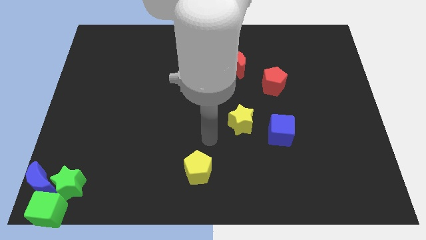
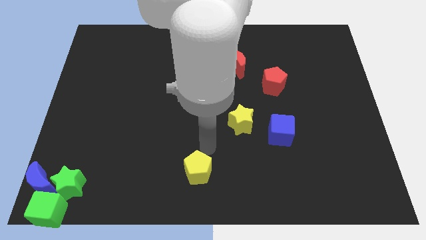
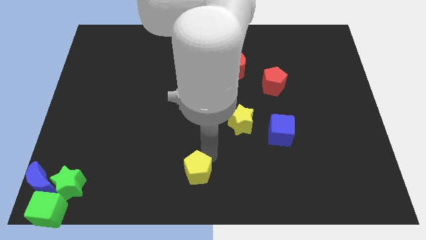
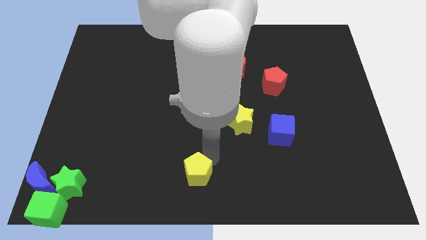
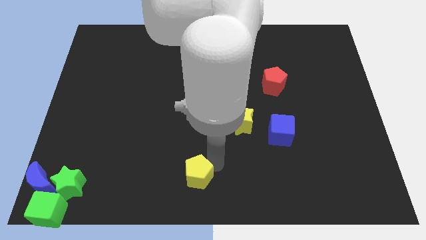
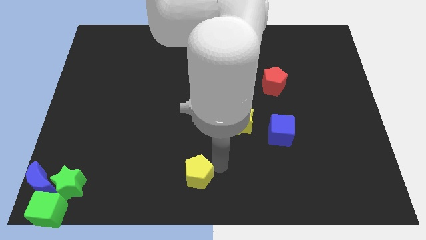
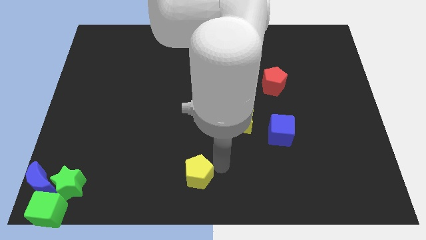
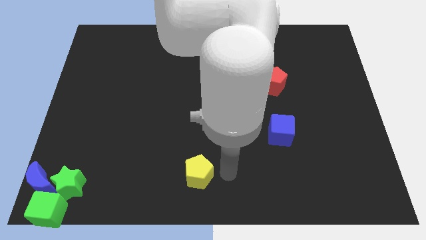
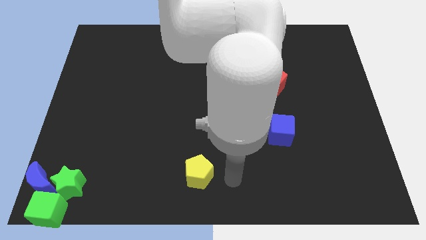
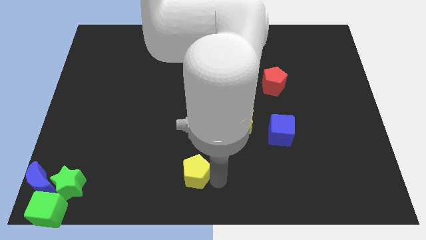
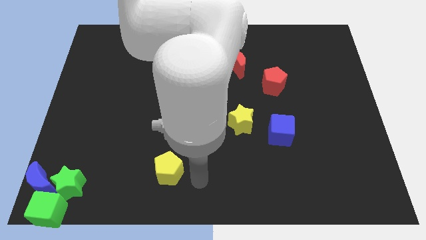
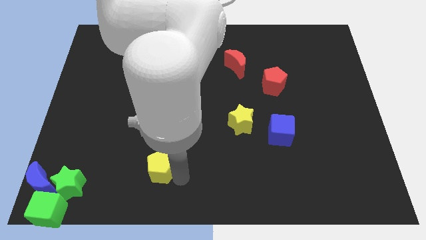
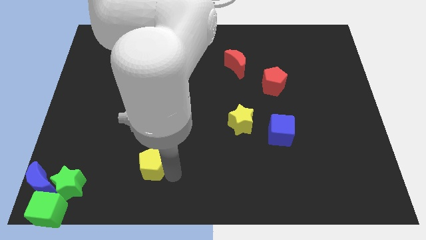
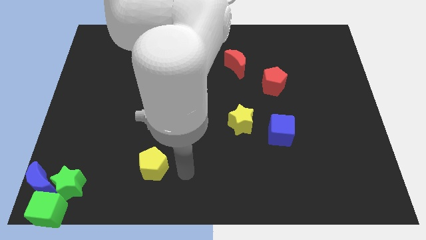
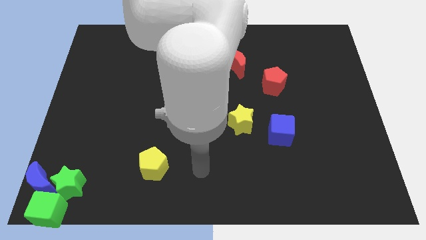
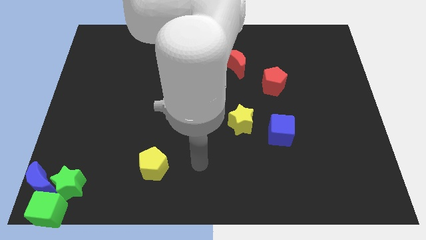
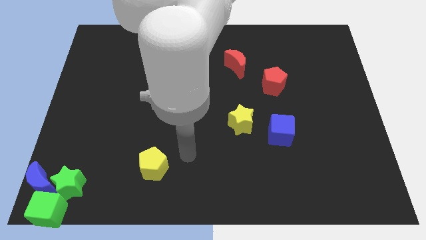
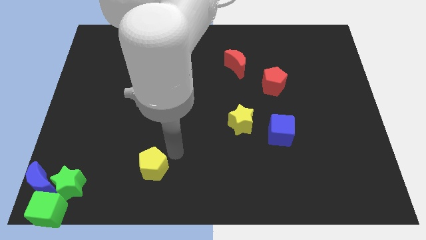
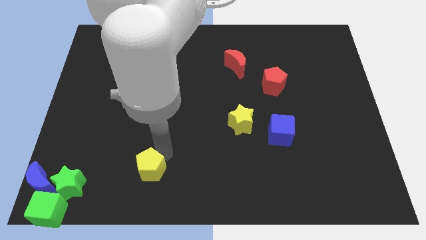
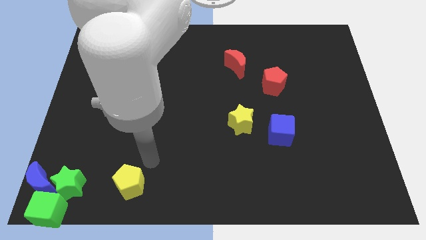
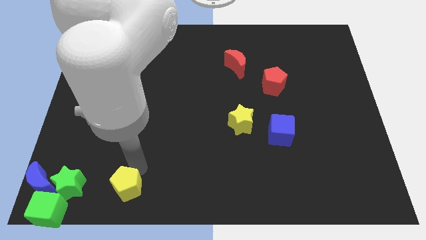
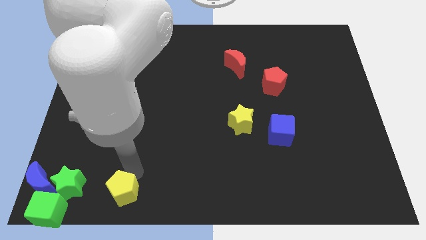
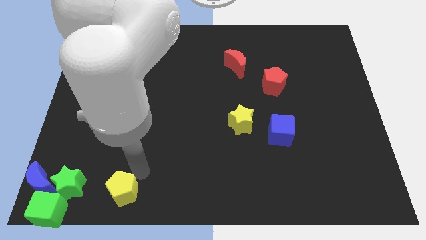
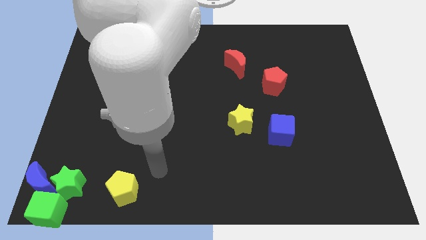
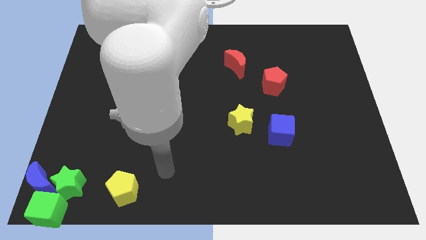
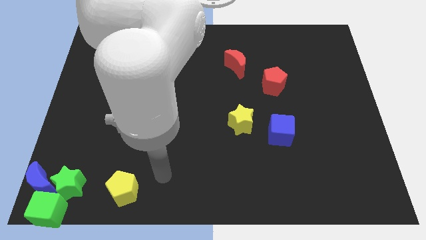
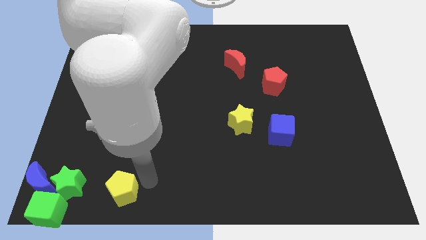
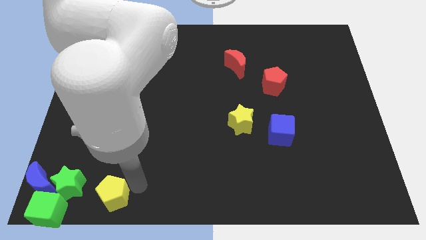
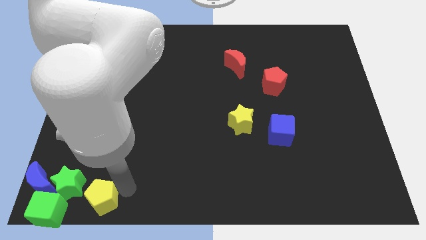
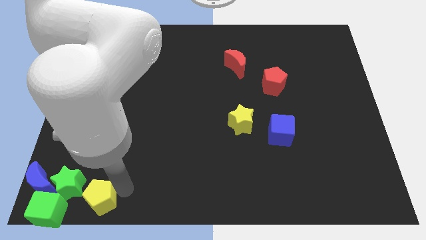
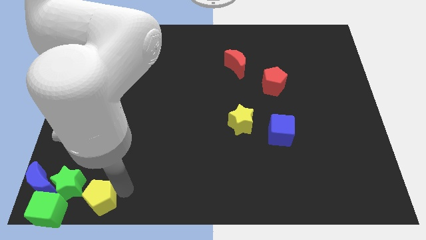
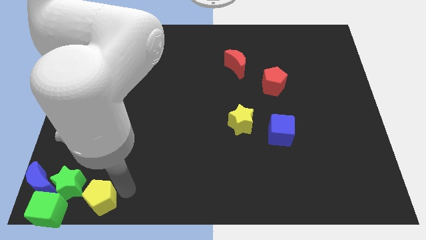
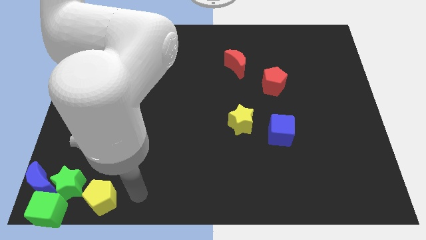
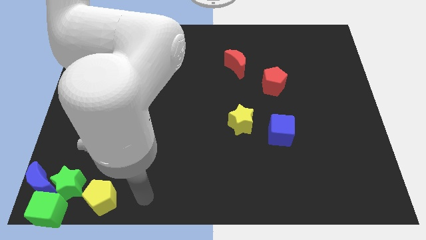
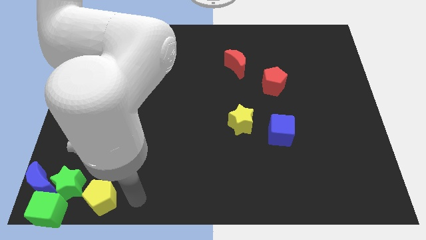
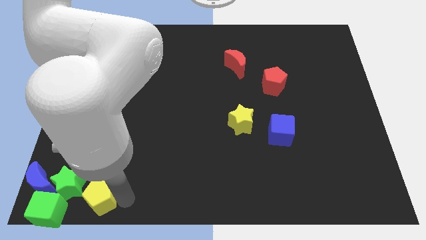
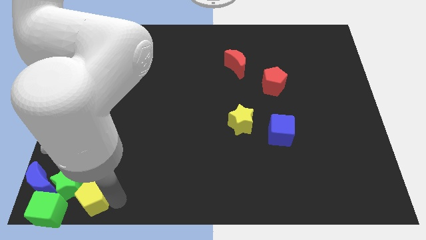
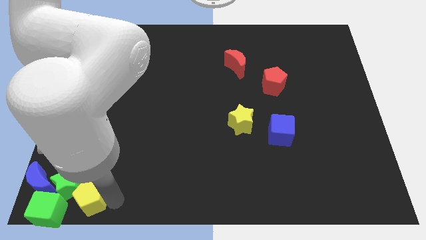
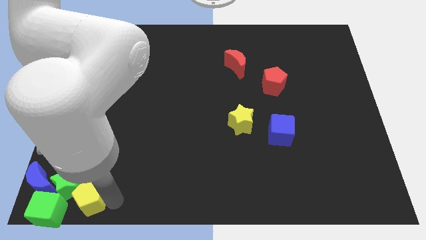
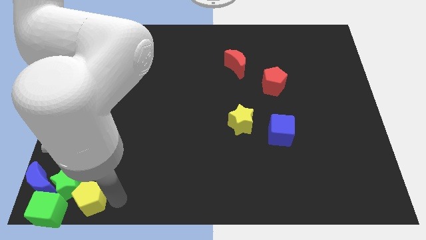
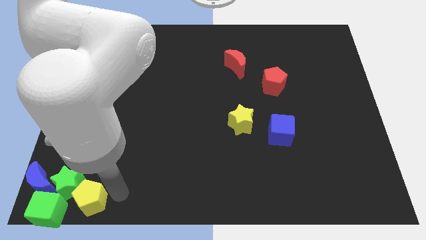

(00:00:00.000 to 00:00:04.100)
push the yellow pentagon close to the green star

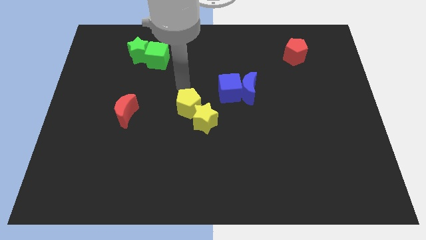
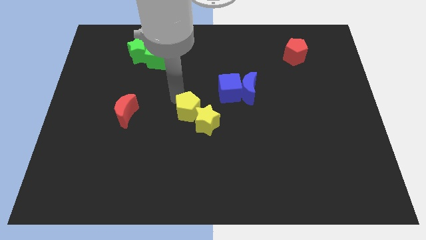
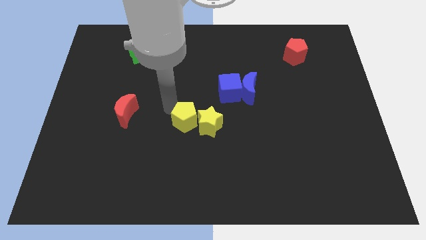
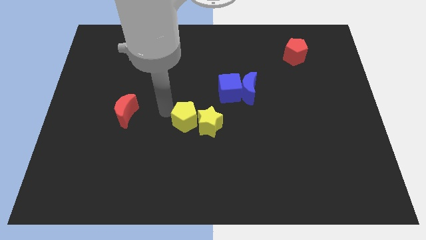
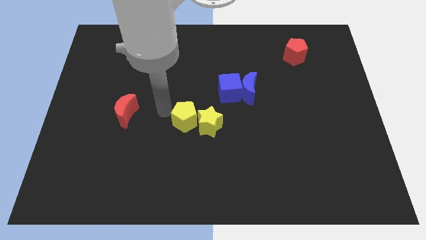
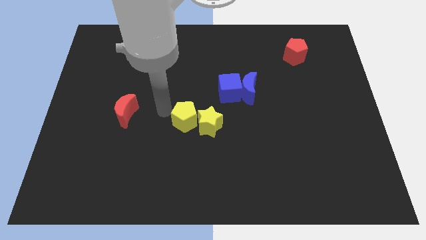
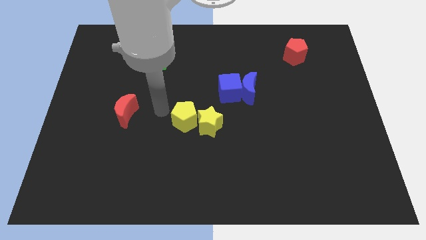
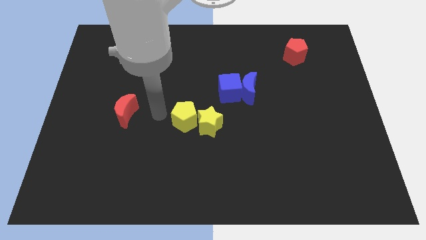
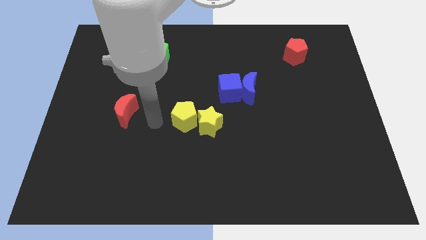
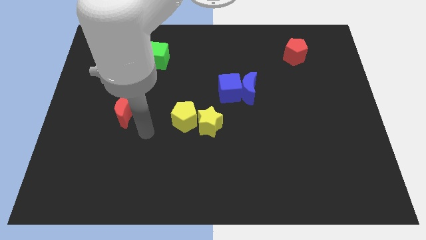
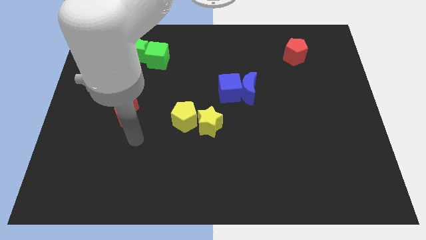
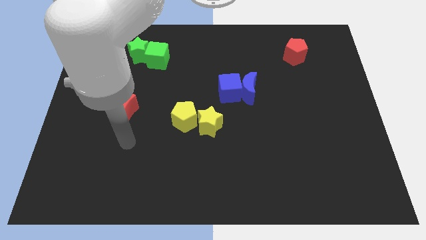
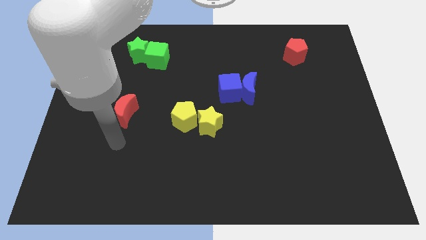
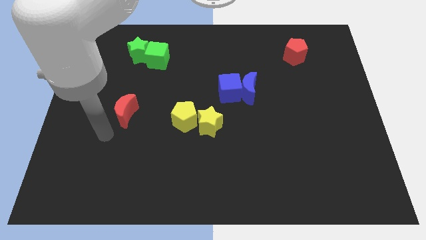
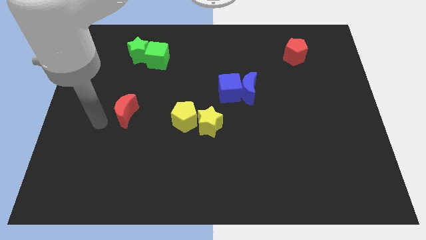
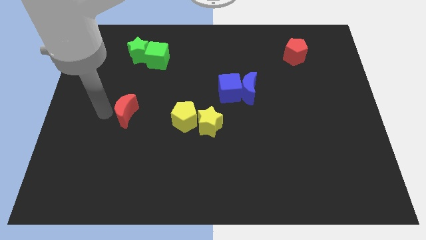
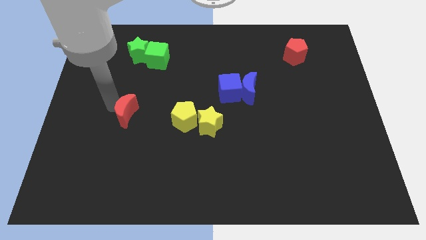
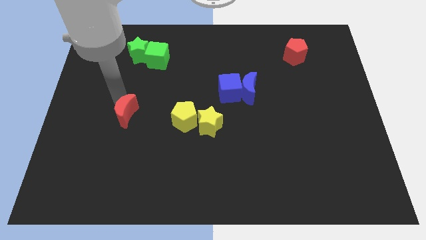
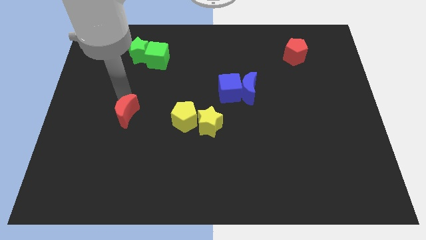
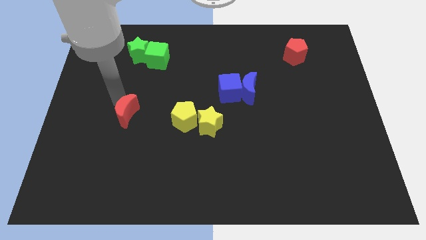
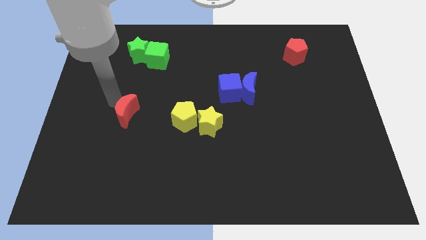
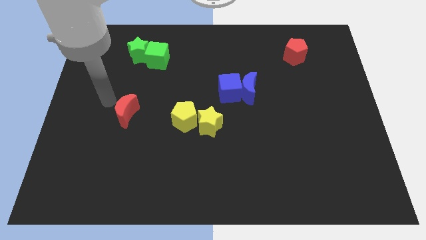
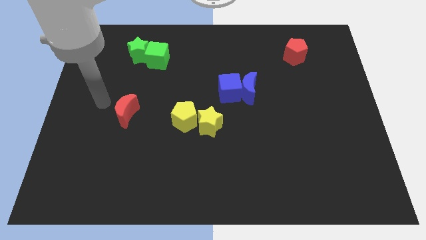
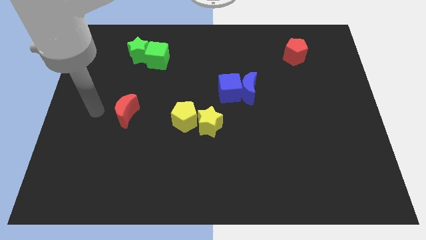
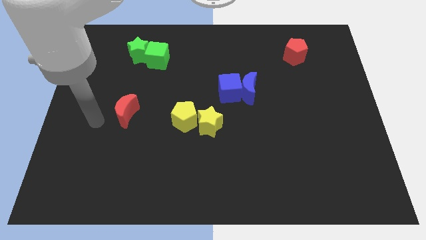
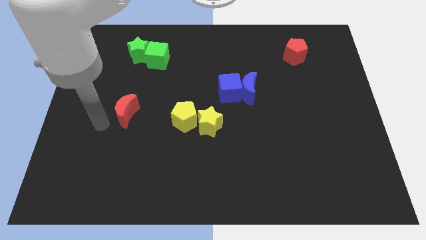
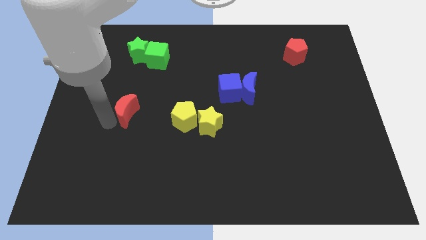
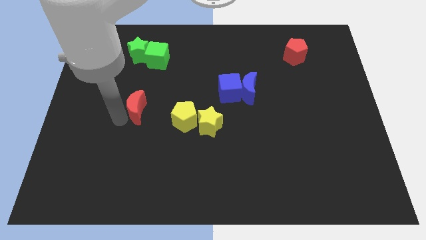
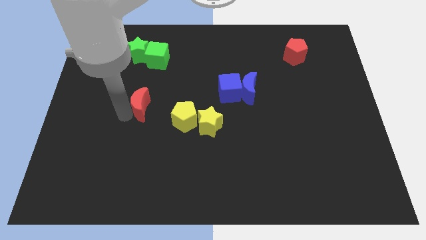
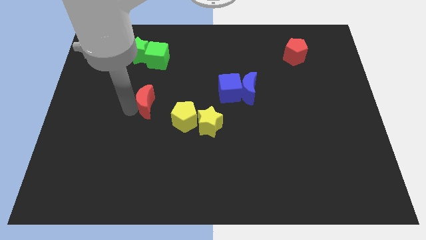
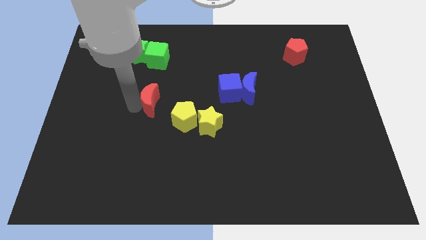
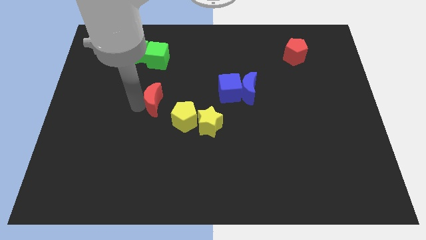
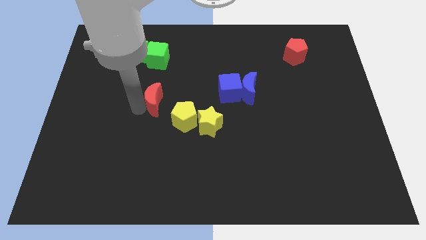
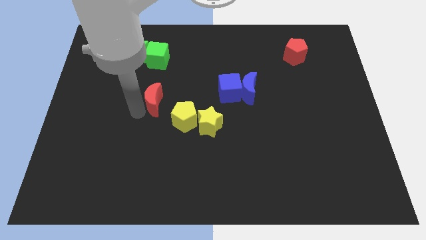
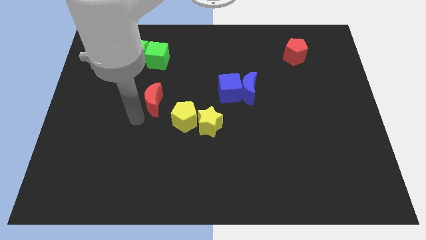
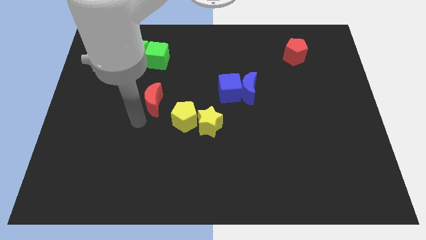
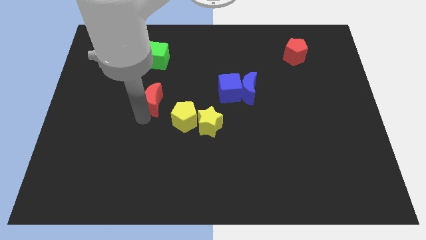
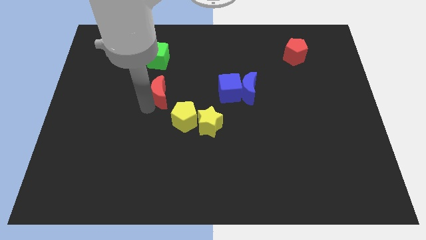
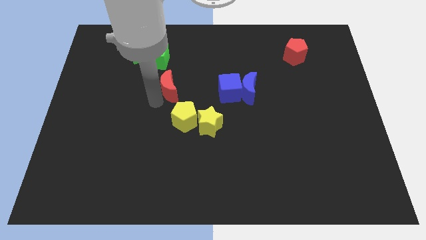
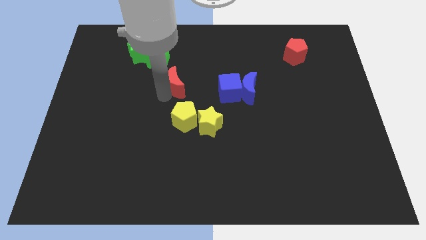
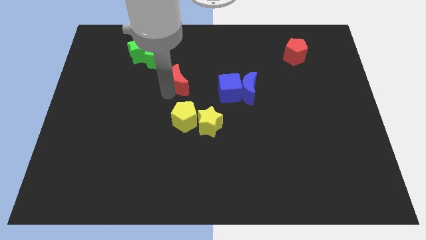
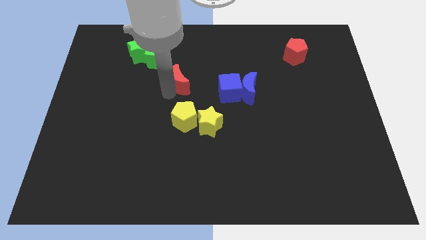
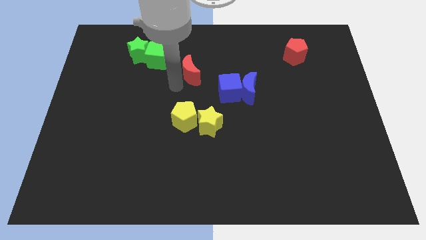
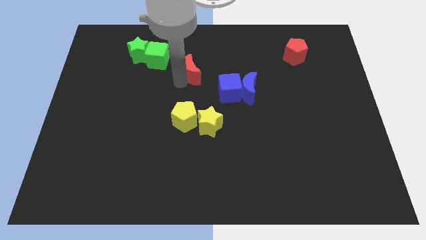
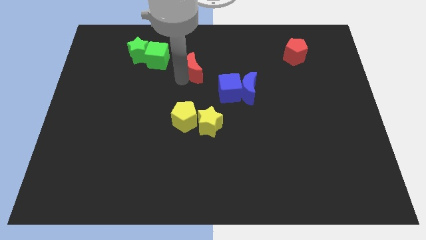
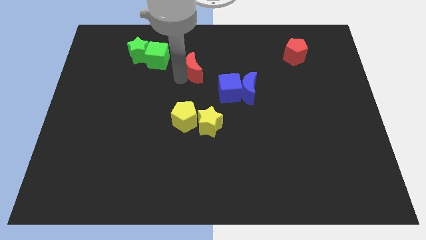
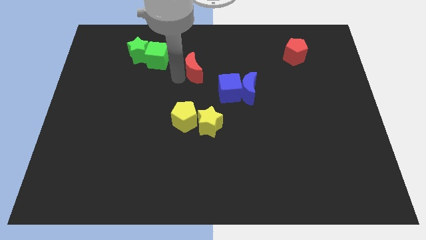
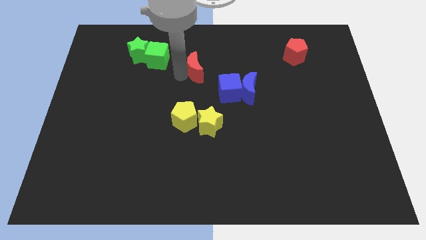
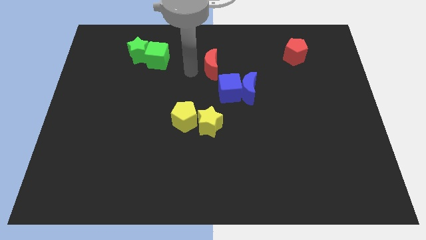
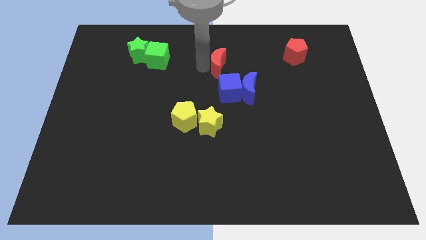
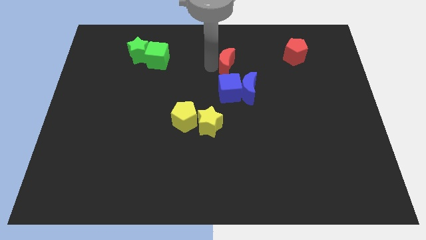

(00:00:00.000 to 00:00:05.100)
move the red crescent above to the blue cube
